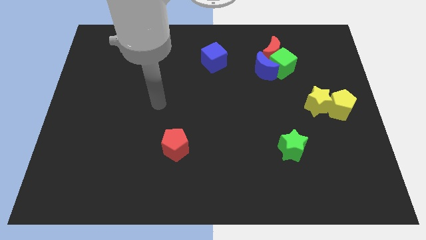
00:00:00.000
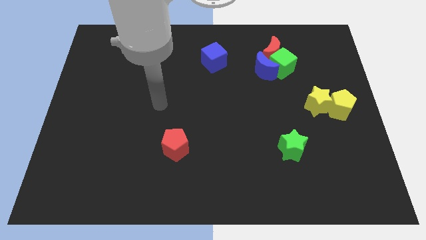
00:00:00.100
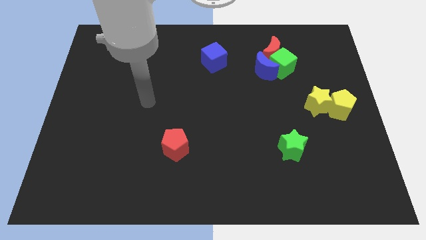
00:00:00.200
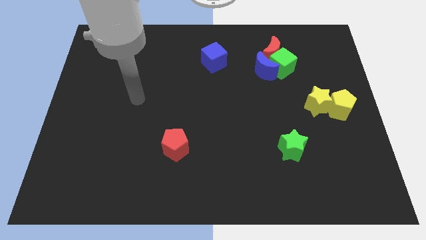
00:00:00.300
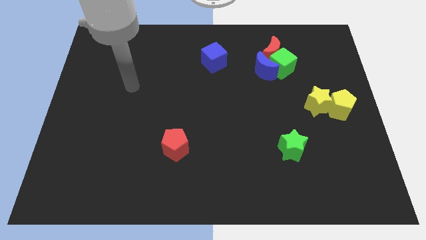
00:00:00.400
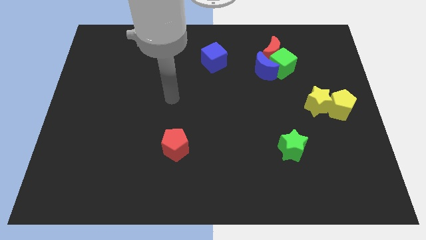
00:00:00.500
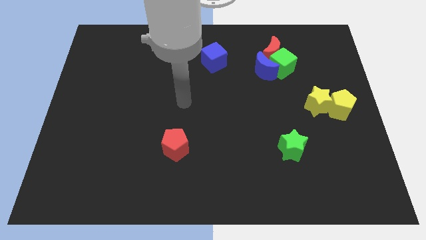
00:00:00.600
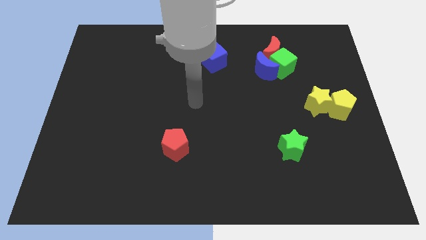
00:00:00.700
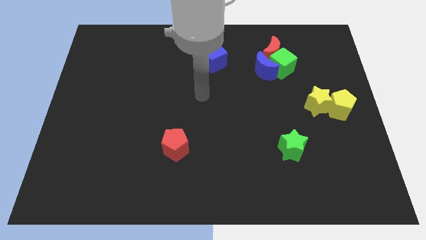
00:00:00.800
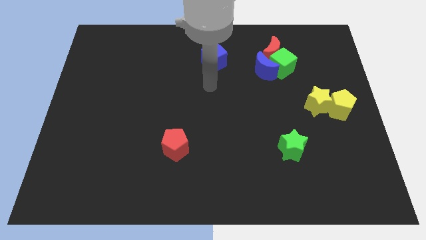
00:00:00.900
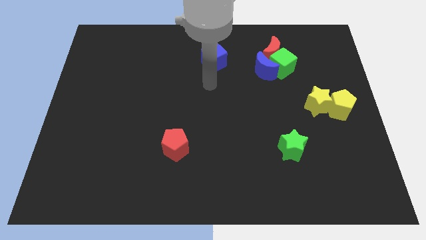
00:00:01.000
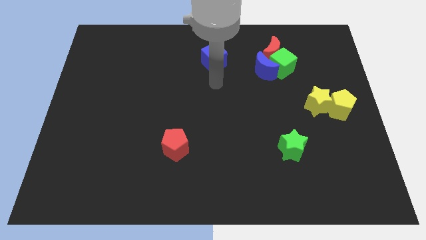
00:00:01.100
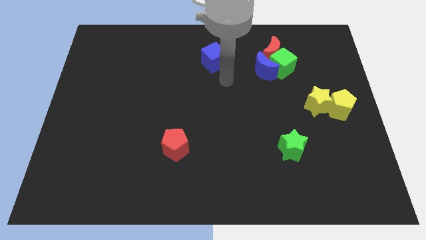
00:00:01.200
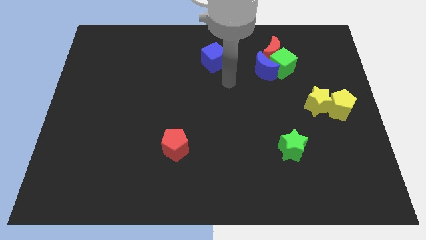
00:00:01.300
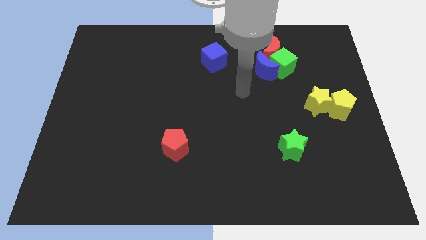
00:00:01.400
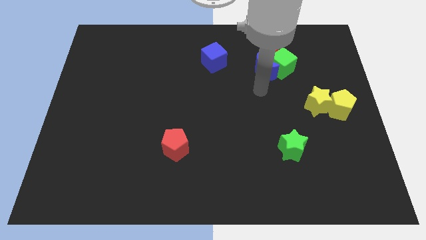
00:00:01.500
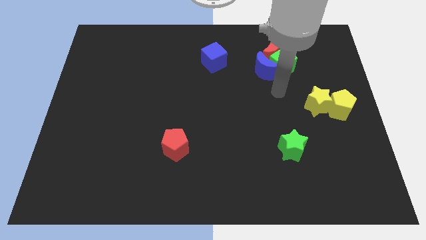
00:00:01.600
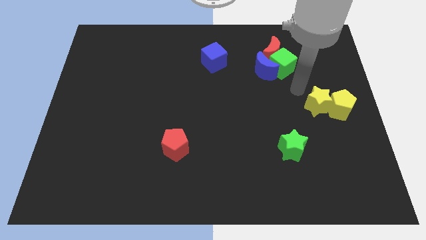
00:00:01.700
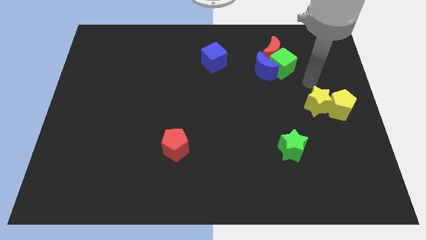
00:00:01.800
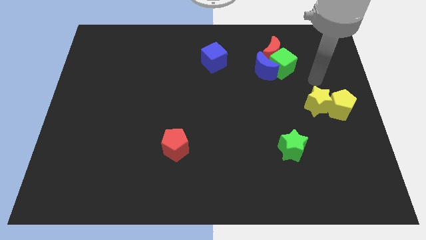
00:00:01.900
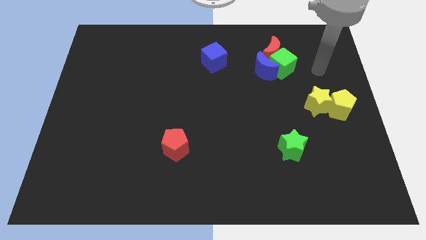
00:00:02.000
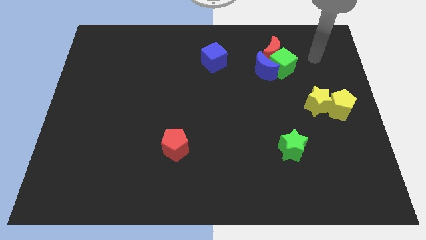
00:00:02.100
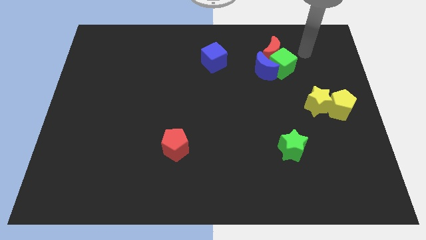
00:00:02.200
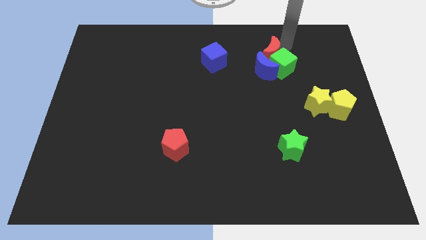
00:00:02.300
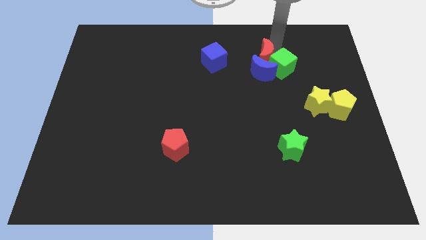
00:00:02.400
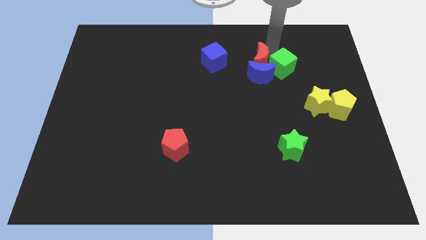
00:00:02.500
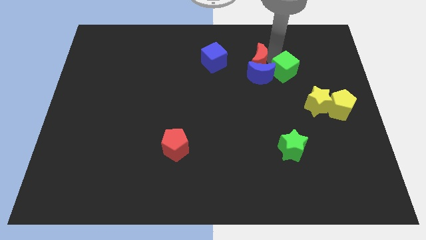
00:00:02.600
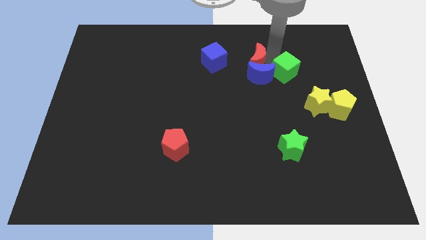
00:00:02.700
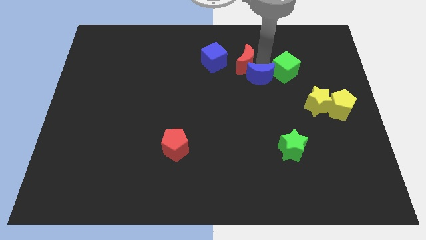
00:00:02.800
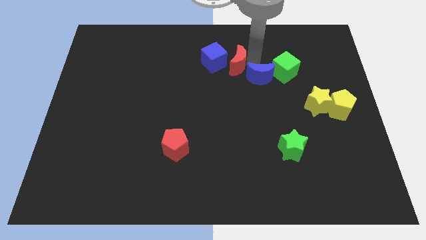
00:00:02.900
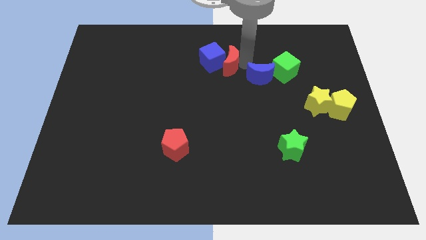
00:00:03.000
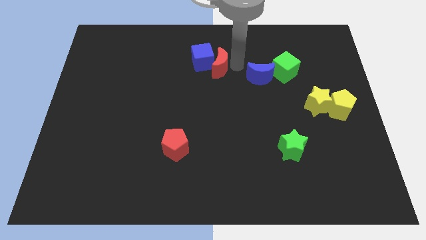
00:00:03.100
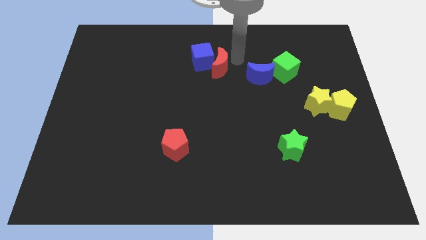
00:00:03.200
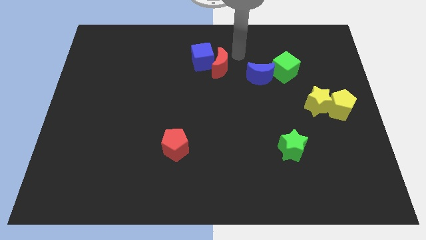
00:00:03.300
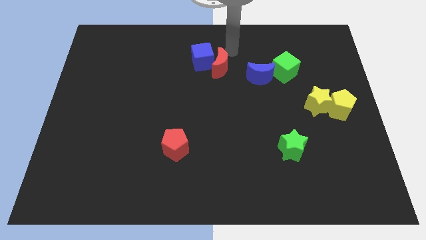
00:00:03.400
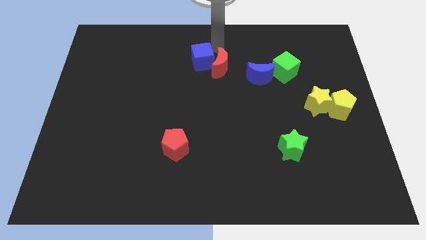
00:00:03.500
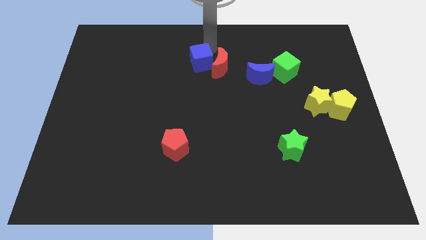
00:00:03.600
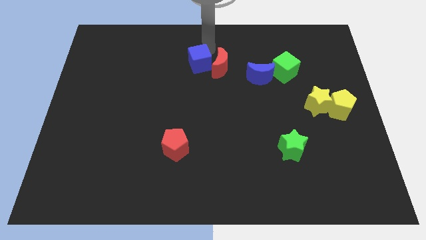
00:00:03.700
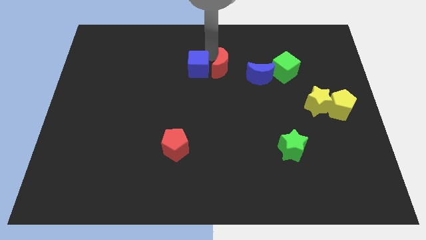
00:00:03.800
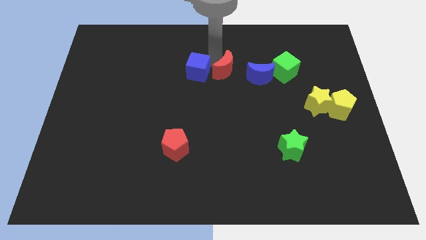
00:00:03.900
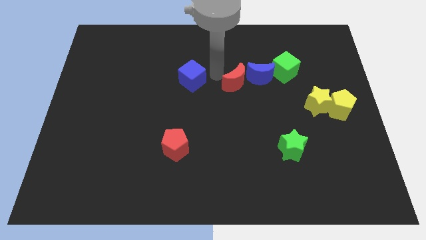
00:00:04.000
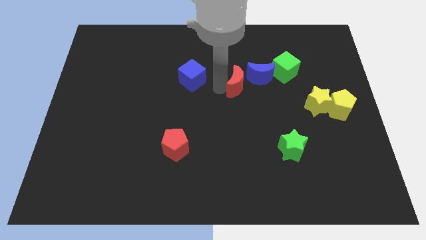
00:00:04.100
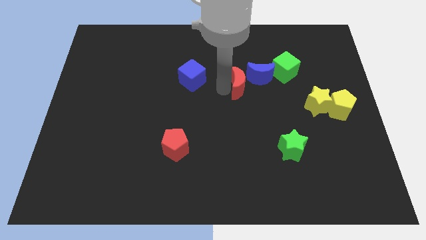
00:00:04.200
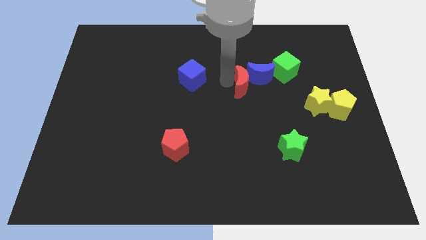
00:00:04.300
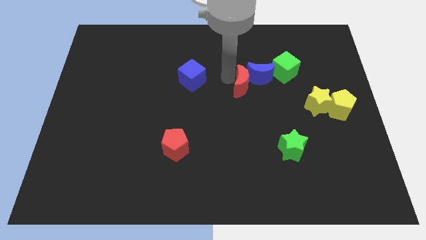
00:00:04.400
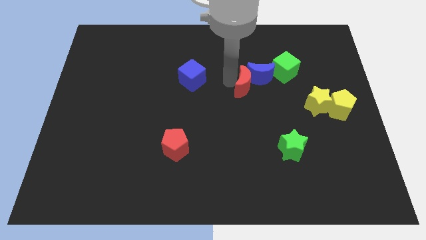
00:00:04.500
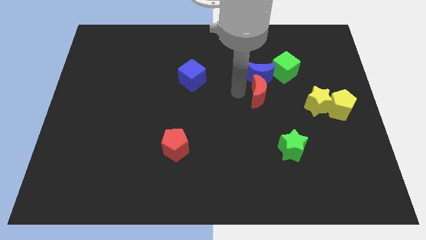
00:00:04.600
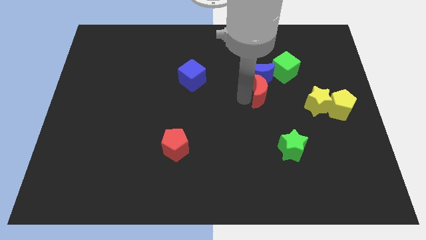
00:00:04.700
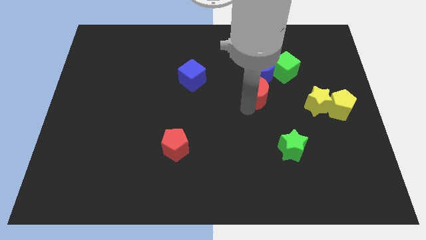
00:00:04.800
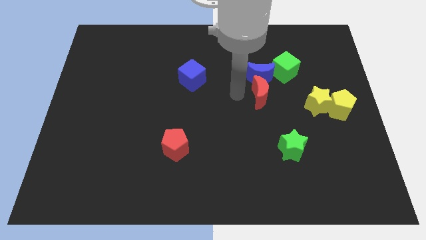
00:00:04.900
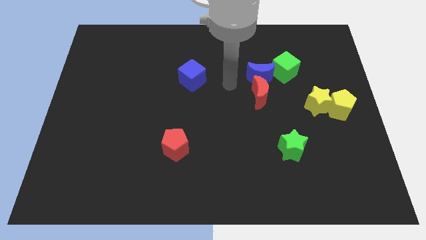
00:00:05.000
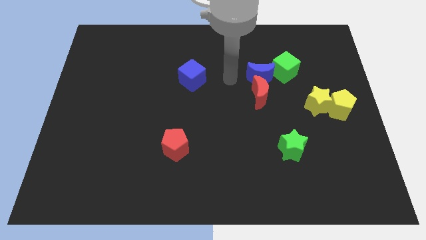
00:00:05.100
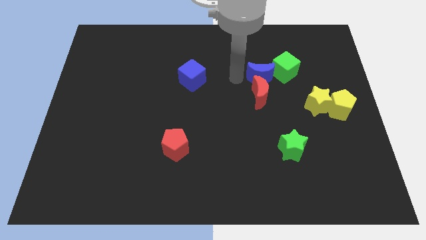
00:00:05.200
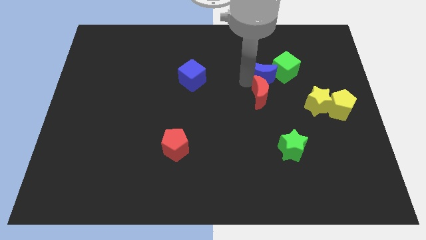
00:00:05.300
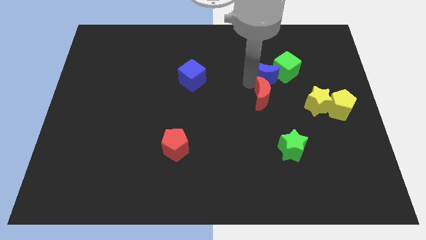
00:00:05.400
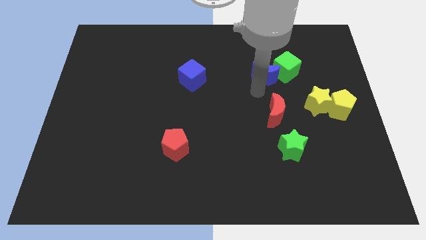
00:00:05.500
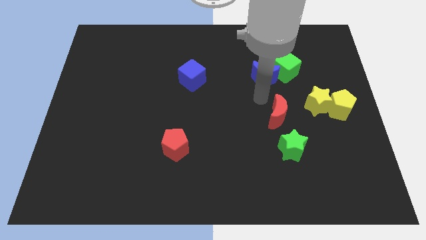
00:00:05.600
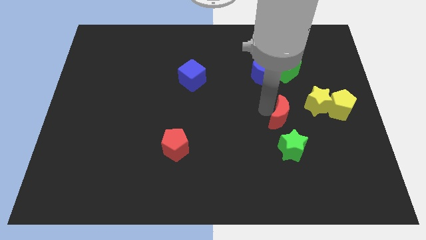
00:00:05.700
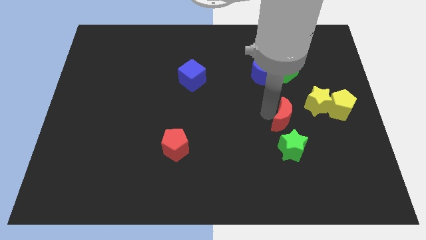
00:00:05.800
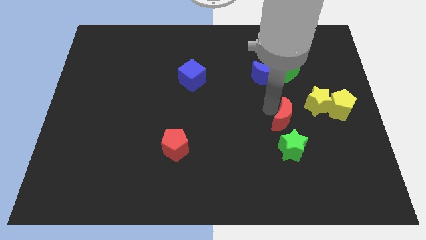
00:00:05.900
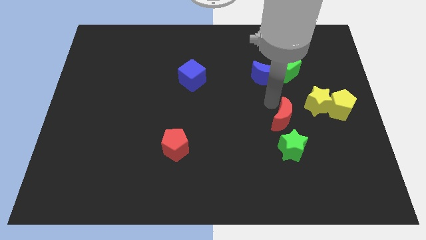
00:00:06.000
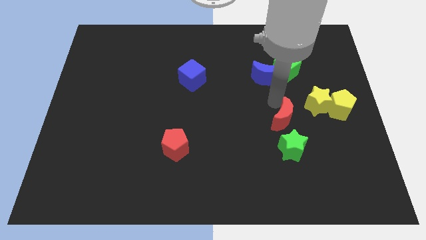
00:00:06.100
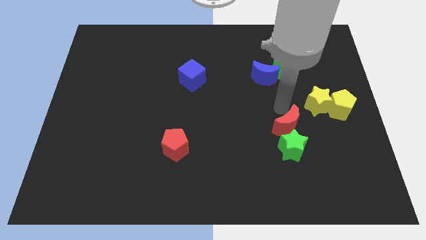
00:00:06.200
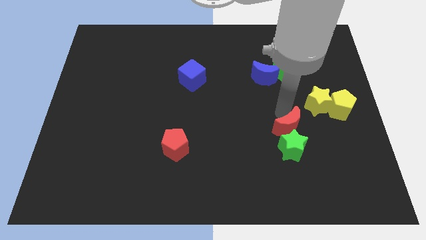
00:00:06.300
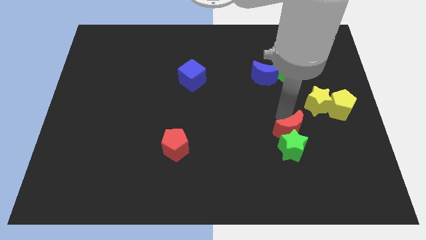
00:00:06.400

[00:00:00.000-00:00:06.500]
put the red moon towards the green star

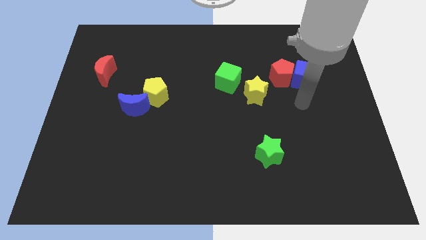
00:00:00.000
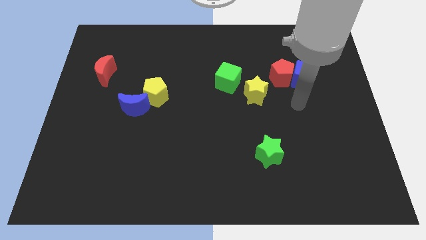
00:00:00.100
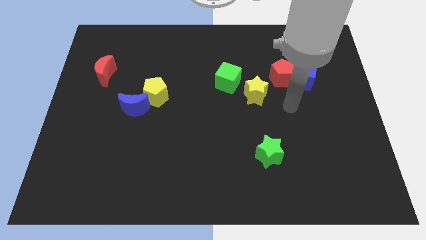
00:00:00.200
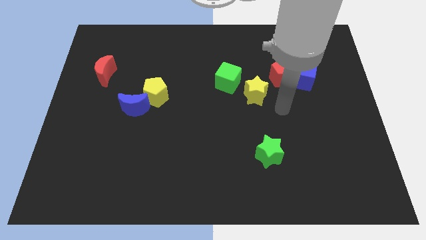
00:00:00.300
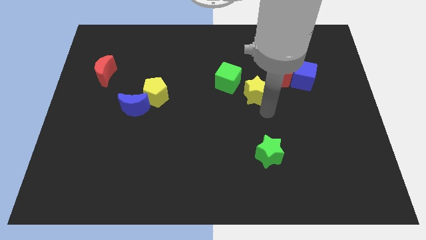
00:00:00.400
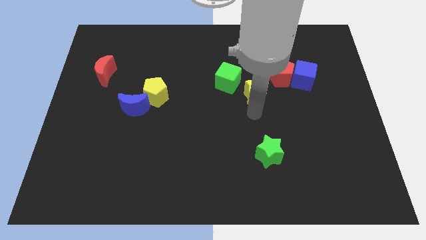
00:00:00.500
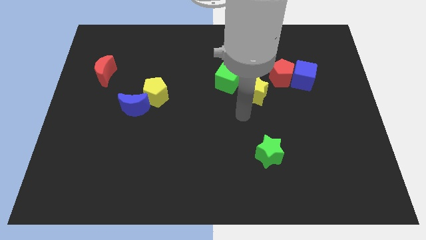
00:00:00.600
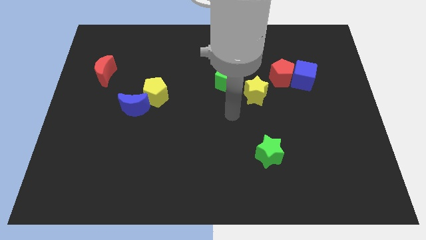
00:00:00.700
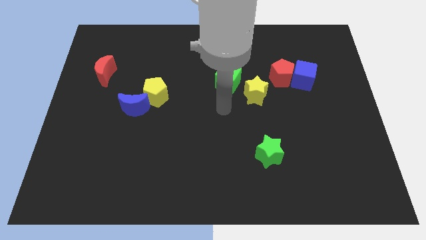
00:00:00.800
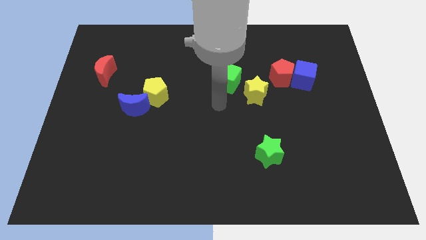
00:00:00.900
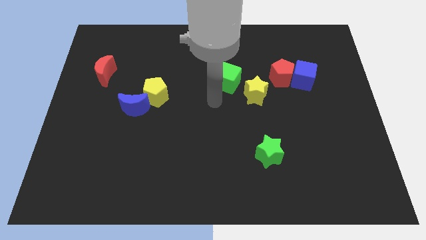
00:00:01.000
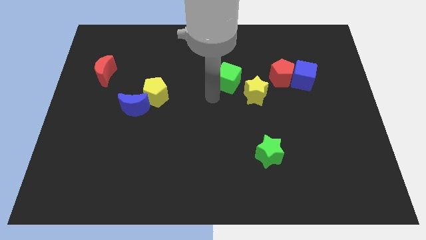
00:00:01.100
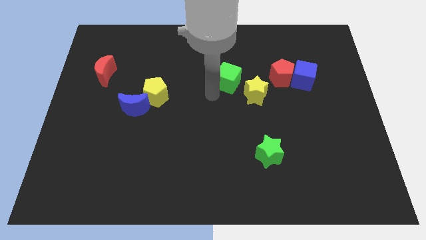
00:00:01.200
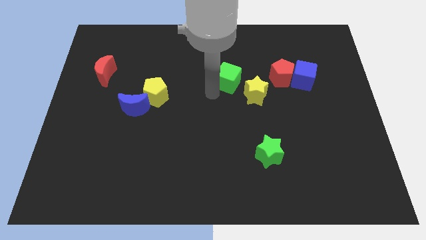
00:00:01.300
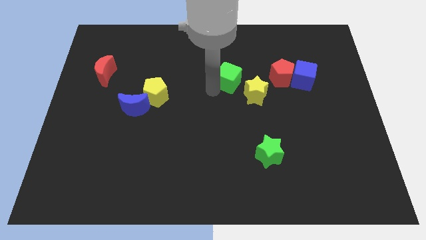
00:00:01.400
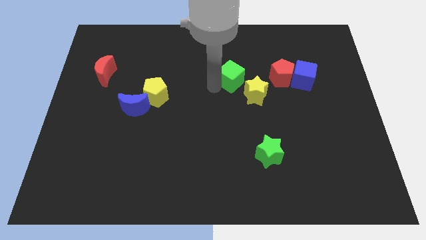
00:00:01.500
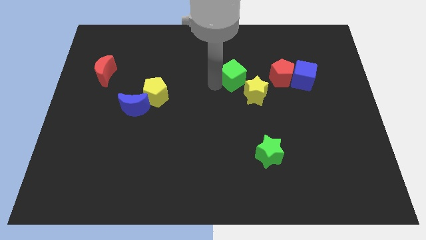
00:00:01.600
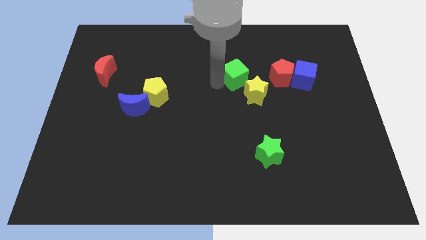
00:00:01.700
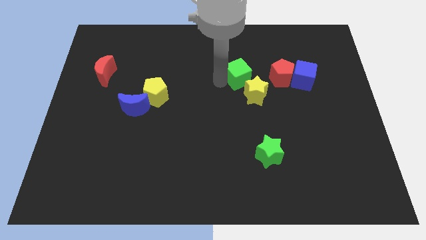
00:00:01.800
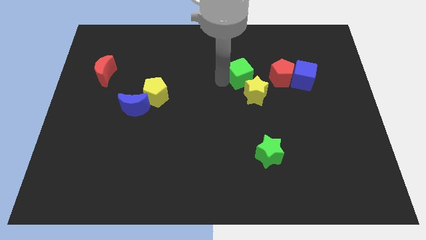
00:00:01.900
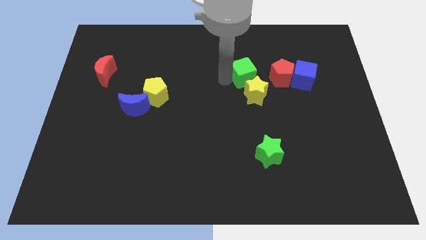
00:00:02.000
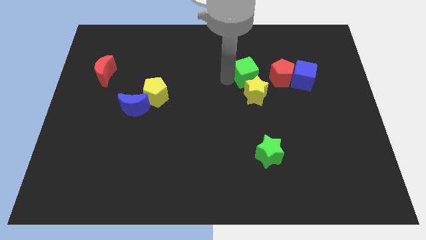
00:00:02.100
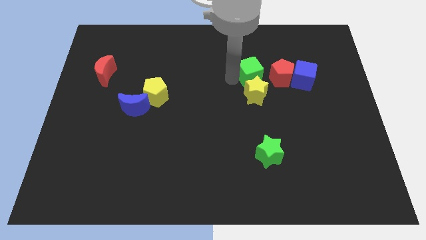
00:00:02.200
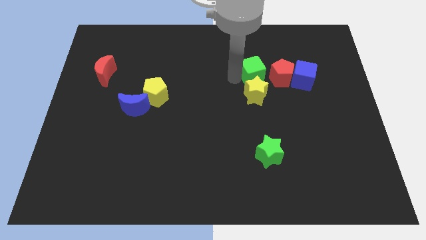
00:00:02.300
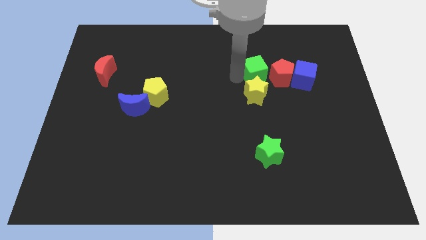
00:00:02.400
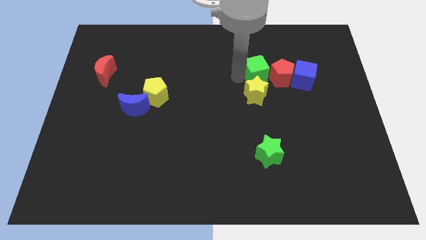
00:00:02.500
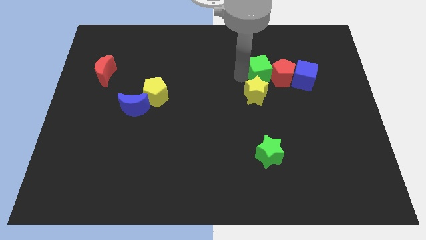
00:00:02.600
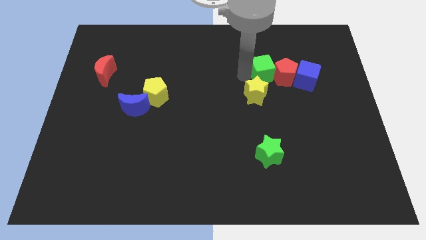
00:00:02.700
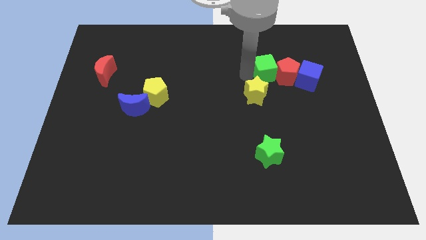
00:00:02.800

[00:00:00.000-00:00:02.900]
push the green cube towards the red pentagon
